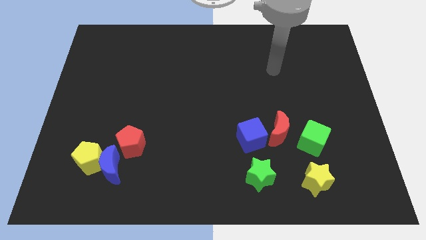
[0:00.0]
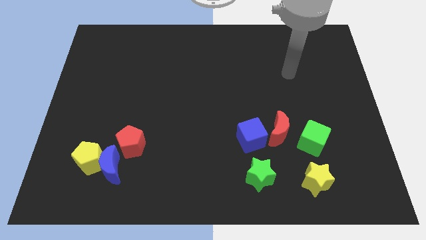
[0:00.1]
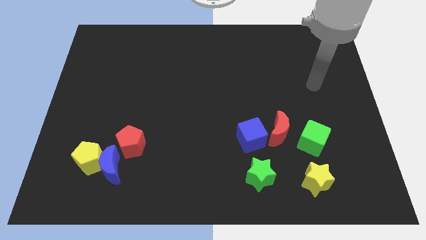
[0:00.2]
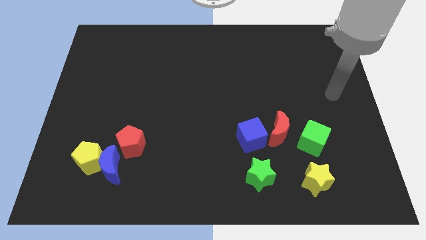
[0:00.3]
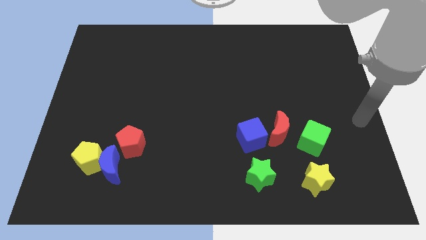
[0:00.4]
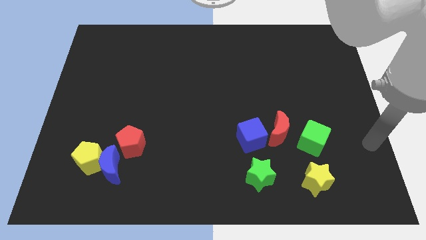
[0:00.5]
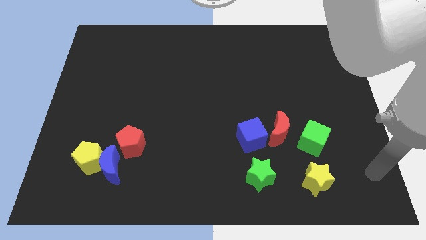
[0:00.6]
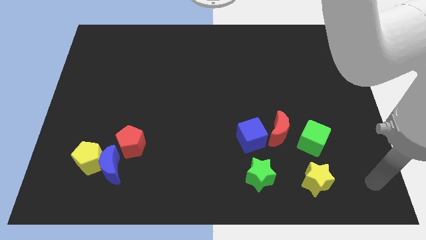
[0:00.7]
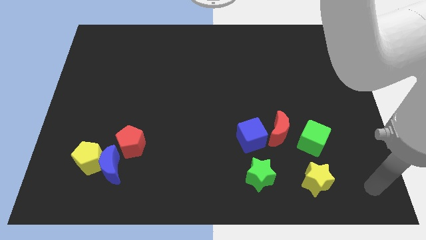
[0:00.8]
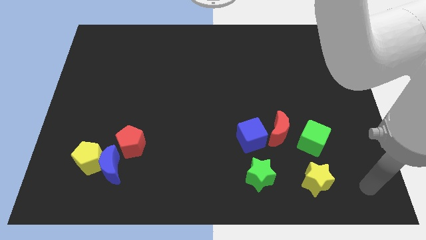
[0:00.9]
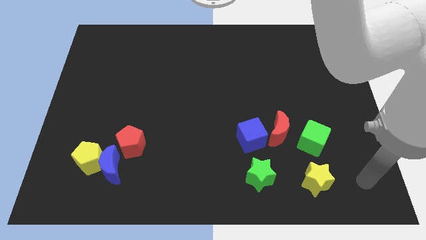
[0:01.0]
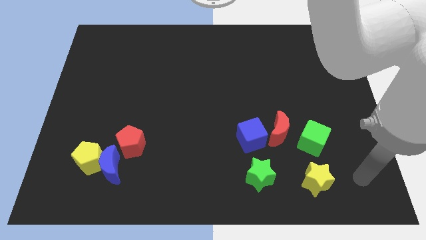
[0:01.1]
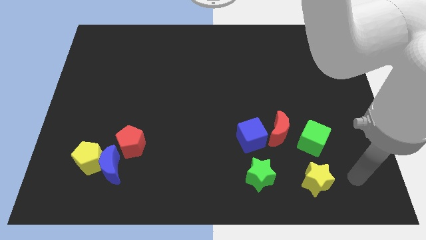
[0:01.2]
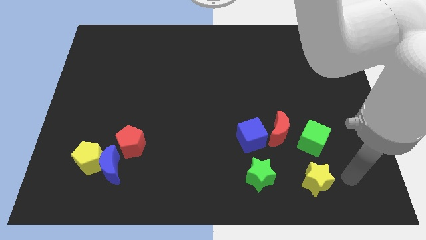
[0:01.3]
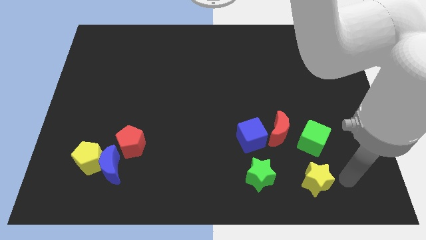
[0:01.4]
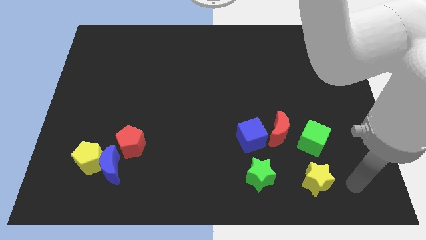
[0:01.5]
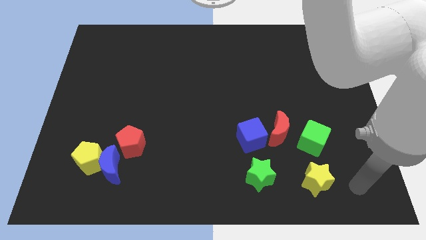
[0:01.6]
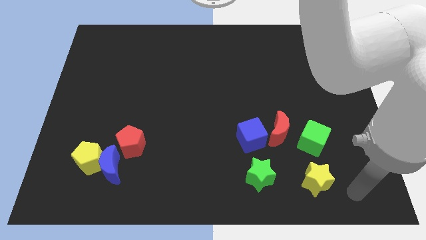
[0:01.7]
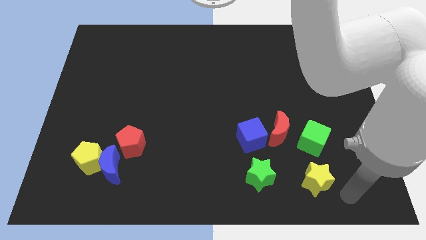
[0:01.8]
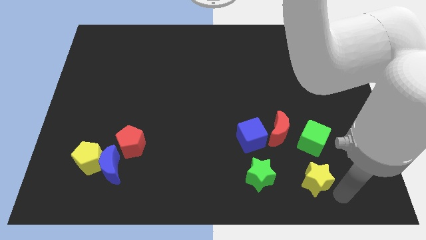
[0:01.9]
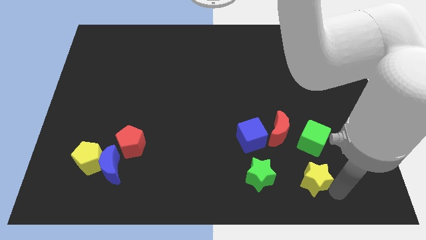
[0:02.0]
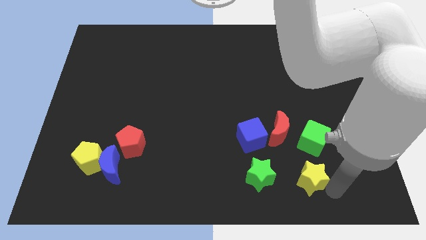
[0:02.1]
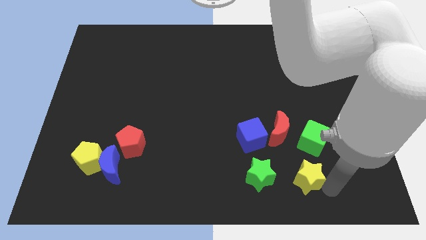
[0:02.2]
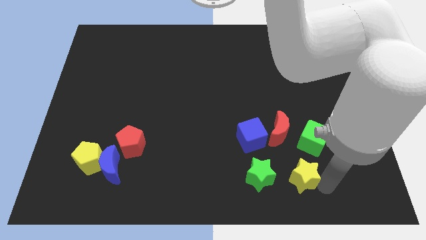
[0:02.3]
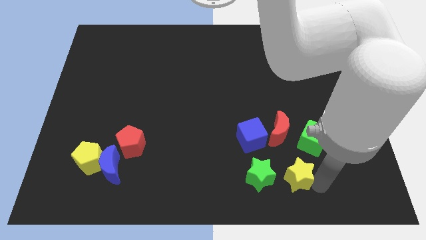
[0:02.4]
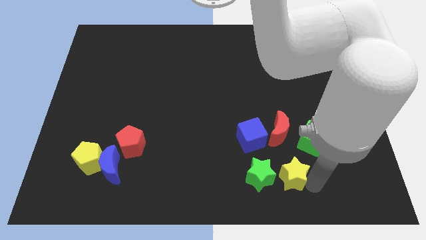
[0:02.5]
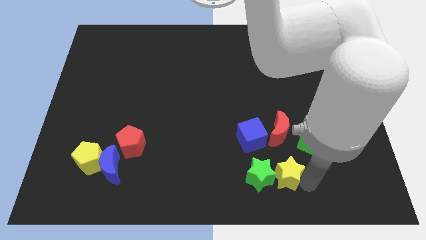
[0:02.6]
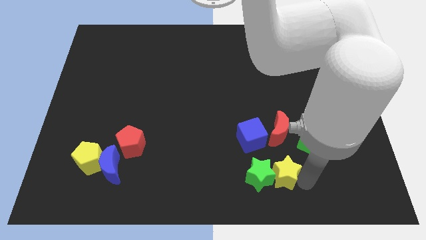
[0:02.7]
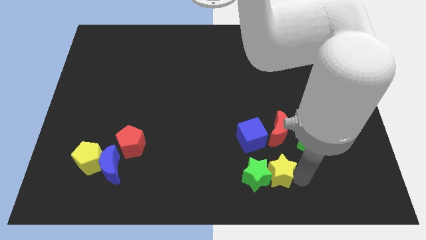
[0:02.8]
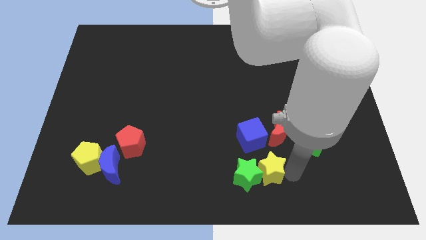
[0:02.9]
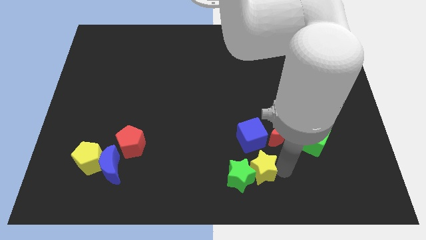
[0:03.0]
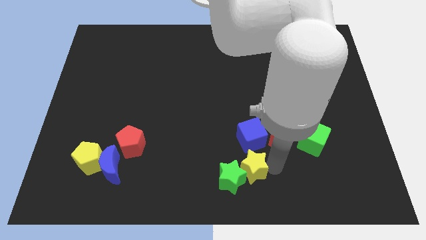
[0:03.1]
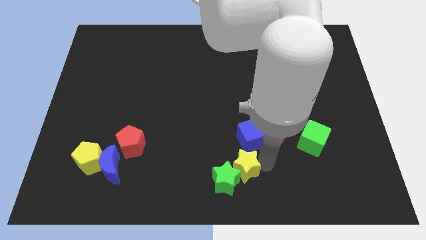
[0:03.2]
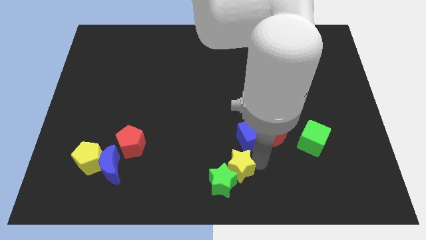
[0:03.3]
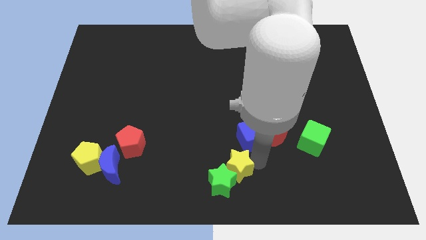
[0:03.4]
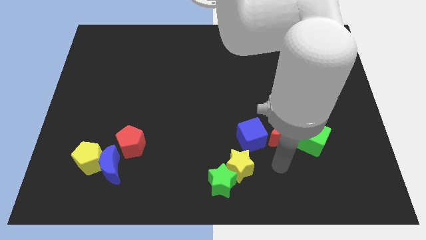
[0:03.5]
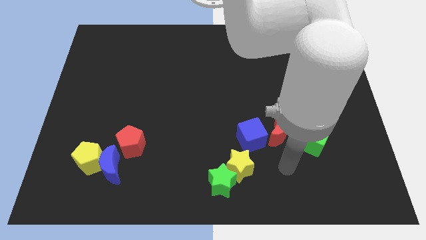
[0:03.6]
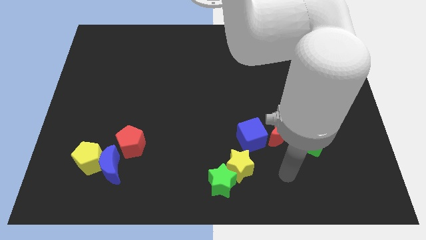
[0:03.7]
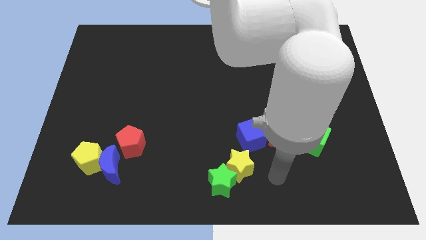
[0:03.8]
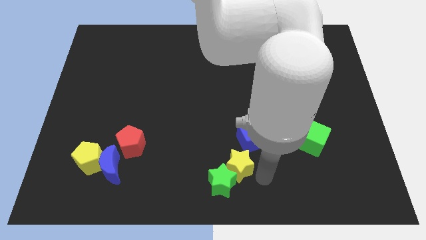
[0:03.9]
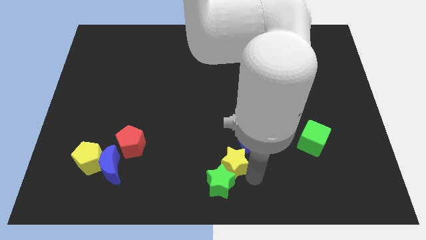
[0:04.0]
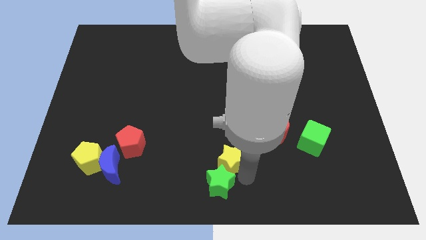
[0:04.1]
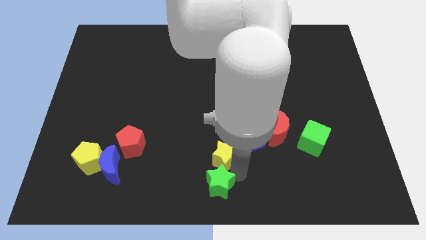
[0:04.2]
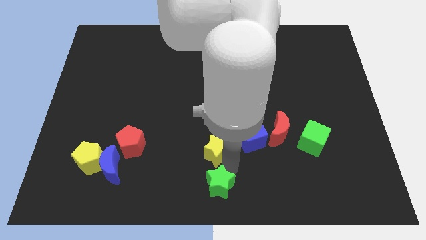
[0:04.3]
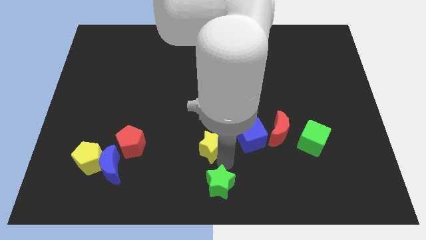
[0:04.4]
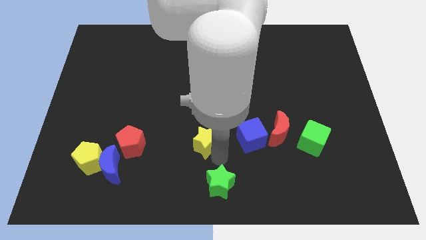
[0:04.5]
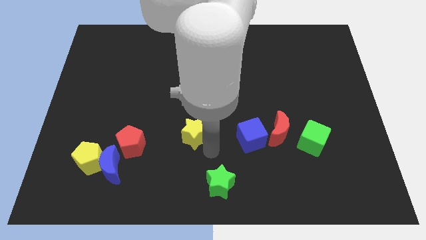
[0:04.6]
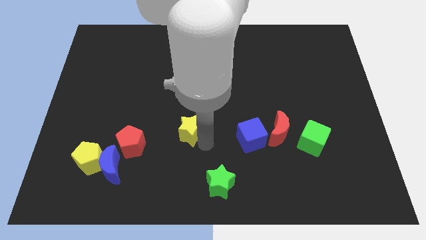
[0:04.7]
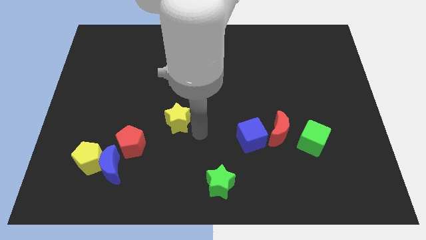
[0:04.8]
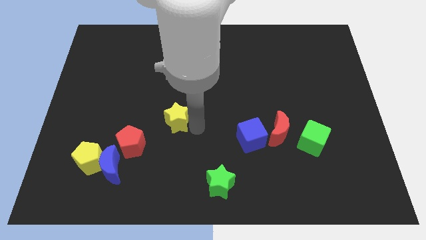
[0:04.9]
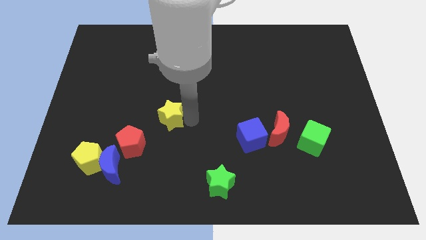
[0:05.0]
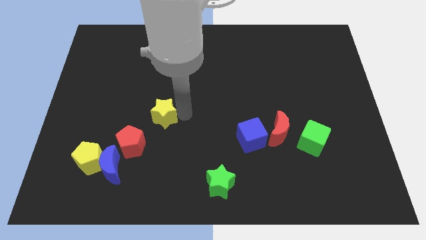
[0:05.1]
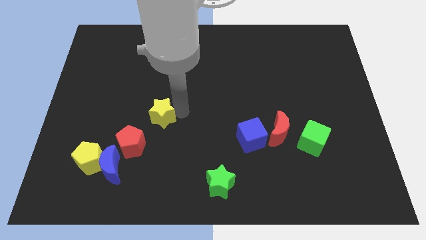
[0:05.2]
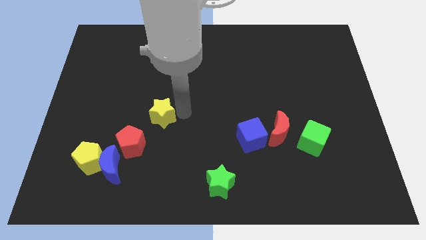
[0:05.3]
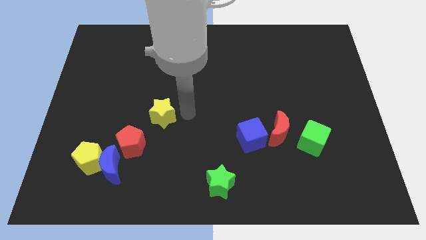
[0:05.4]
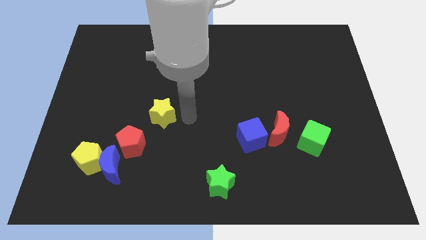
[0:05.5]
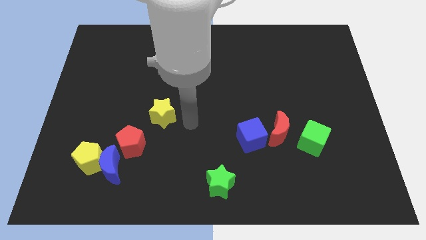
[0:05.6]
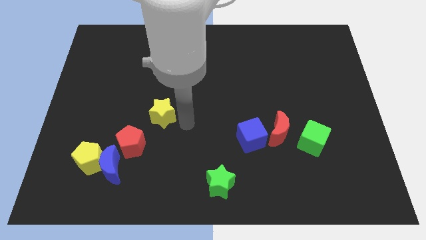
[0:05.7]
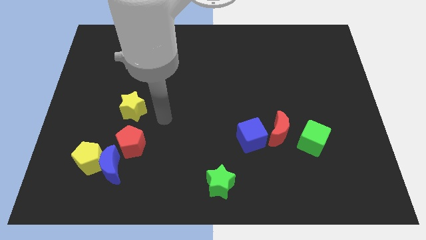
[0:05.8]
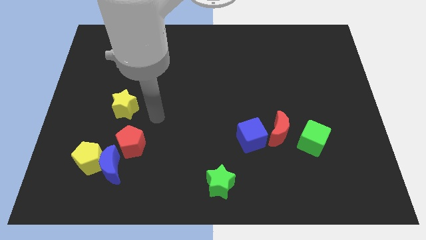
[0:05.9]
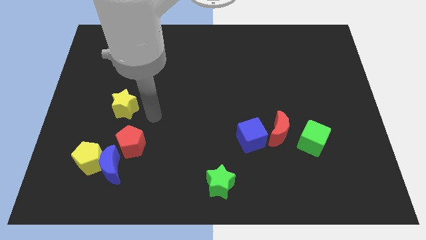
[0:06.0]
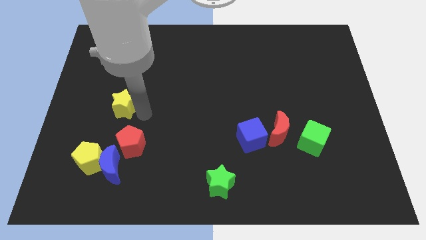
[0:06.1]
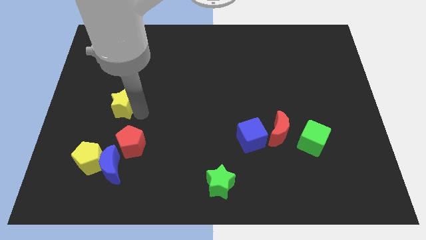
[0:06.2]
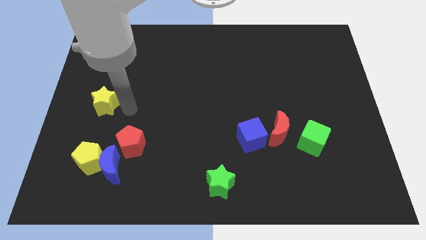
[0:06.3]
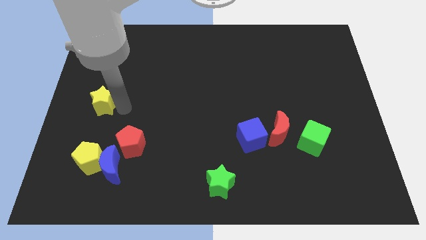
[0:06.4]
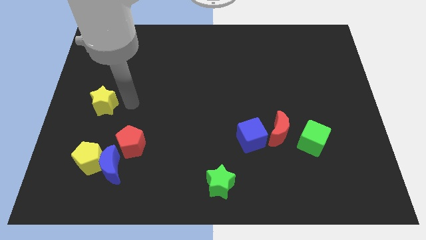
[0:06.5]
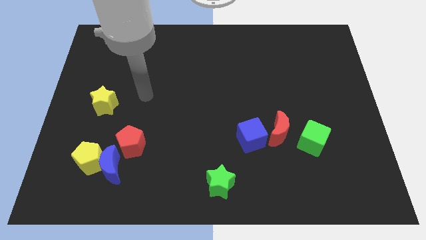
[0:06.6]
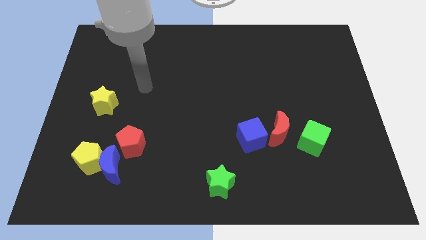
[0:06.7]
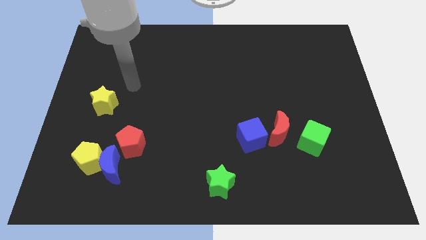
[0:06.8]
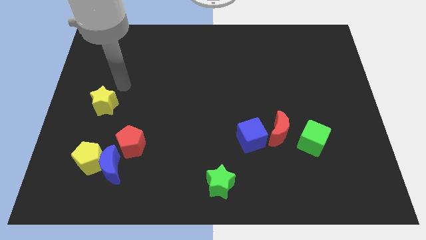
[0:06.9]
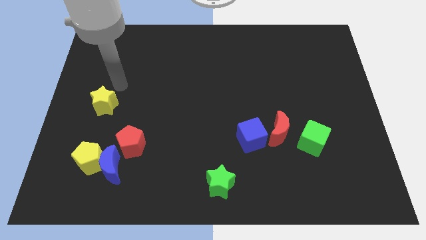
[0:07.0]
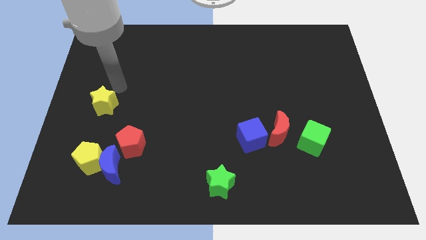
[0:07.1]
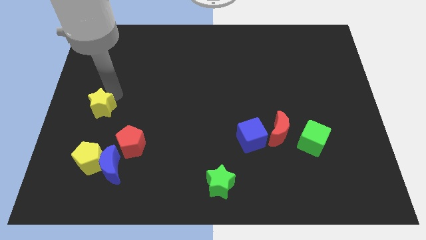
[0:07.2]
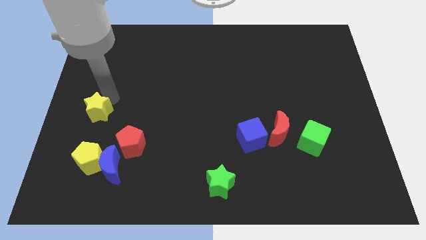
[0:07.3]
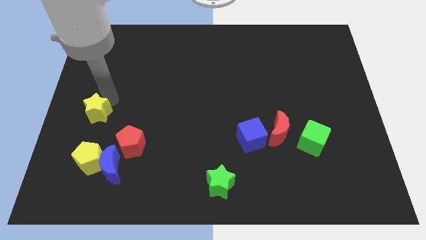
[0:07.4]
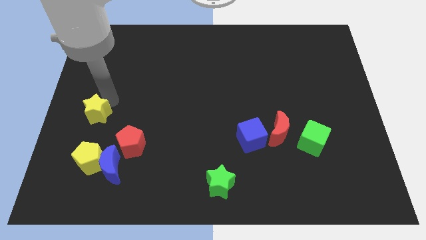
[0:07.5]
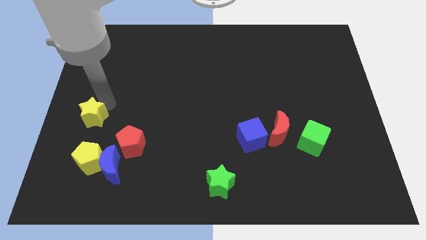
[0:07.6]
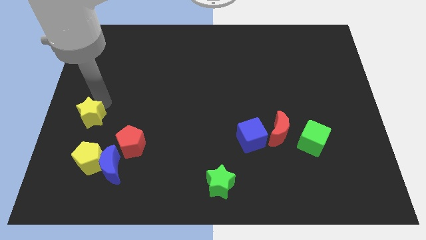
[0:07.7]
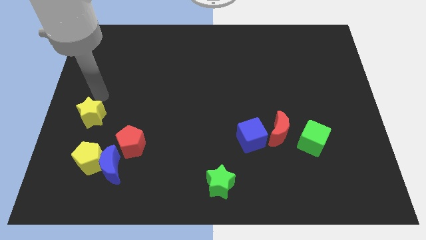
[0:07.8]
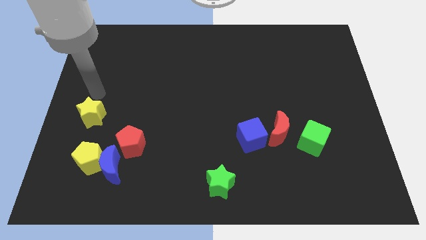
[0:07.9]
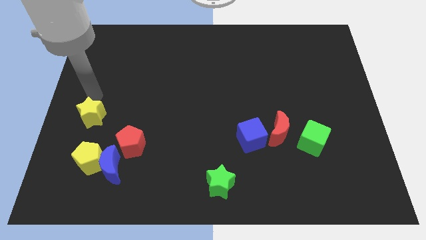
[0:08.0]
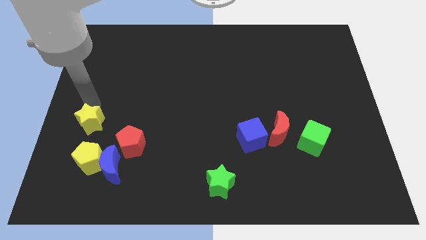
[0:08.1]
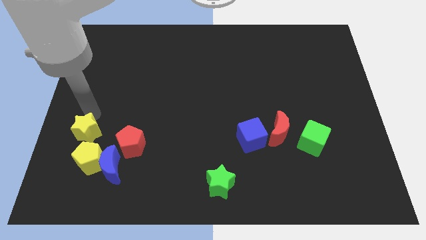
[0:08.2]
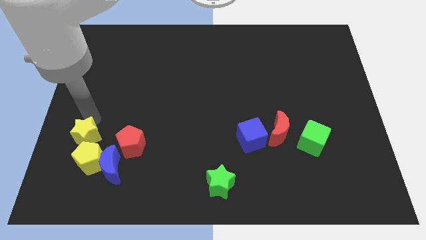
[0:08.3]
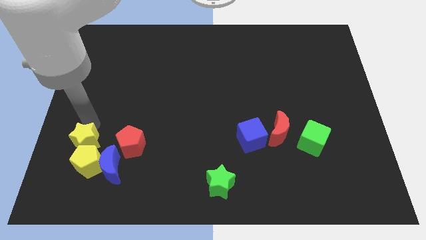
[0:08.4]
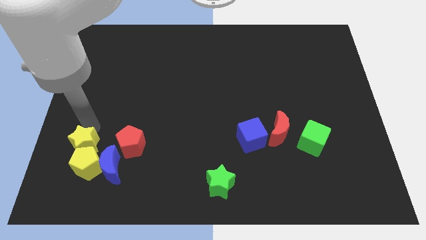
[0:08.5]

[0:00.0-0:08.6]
put the yellow star next to the yellow pentagon
